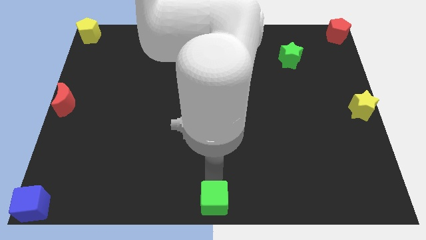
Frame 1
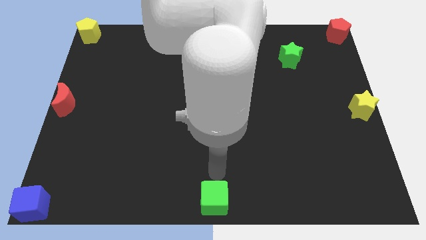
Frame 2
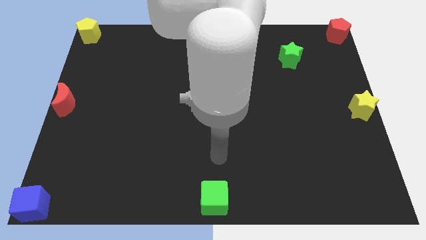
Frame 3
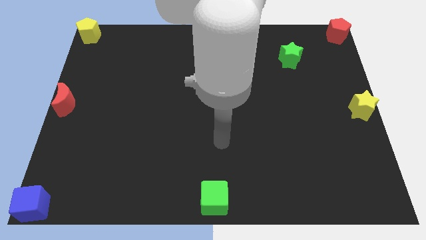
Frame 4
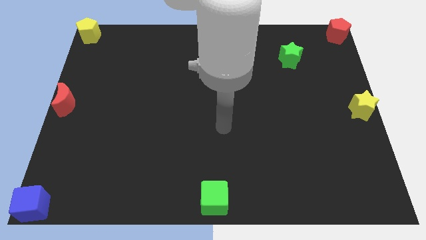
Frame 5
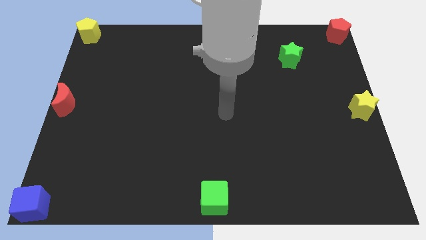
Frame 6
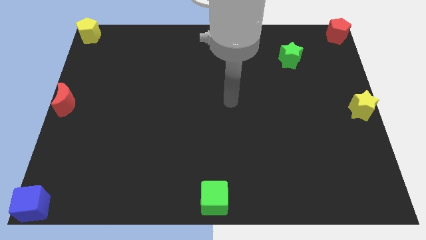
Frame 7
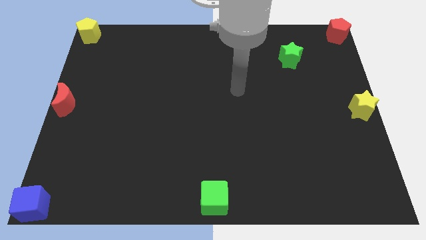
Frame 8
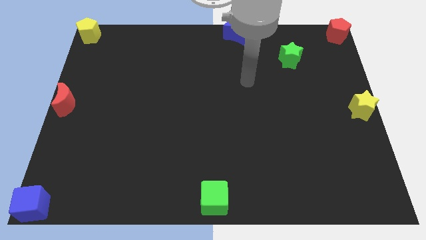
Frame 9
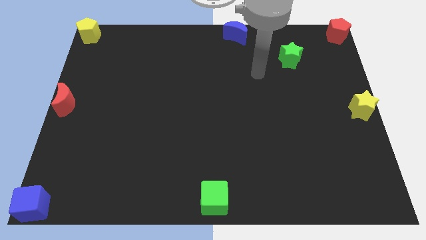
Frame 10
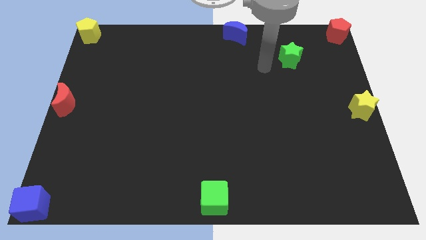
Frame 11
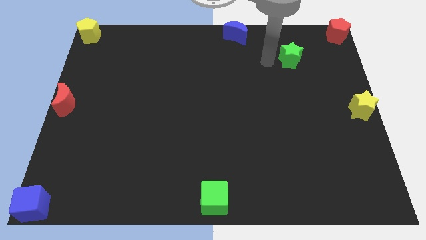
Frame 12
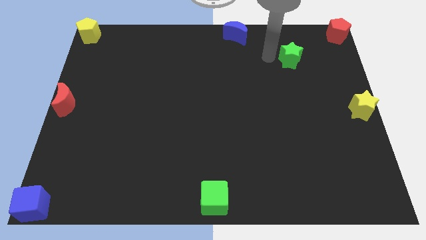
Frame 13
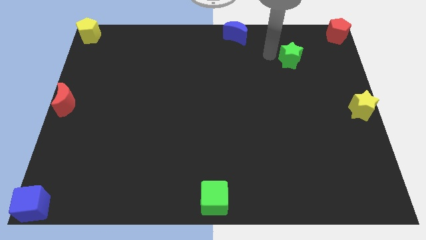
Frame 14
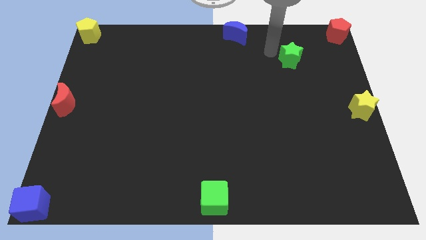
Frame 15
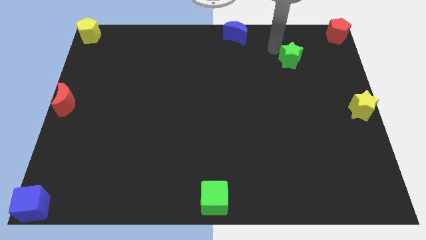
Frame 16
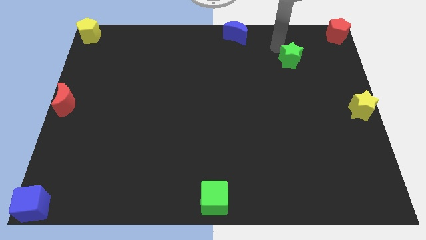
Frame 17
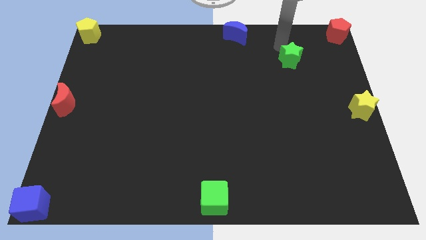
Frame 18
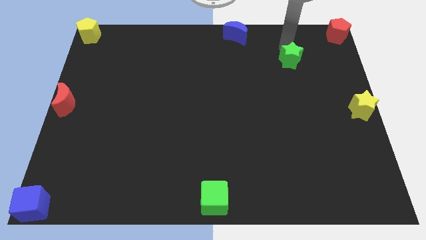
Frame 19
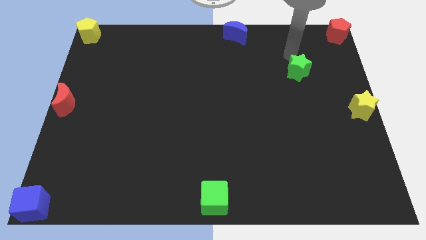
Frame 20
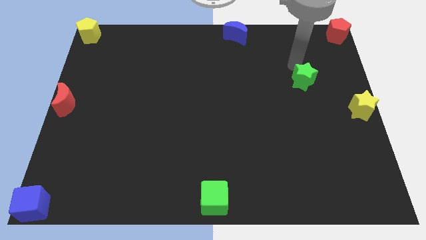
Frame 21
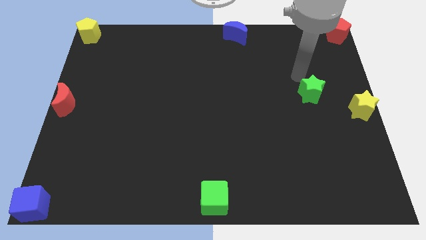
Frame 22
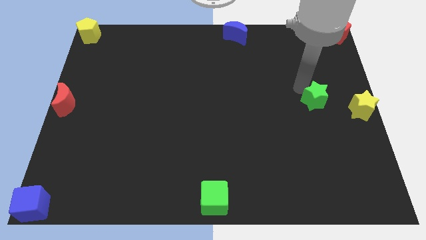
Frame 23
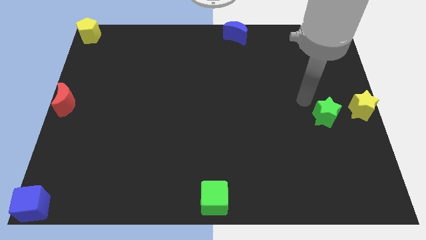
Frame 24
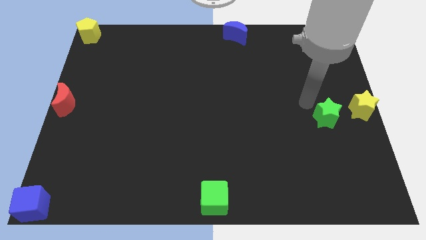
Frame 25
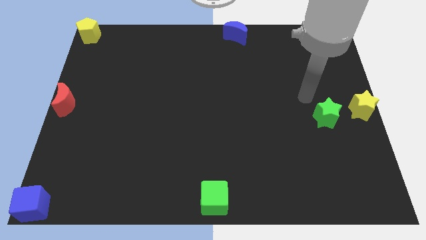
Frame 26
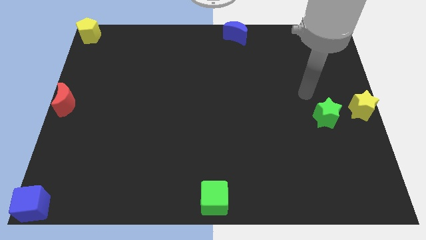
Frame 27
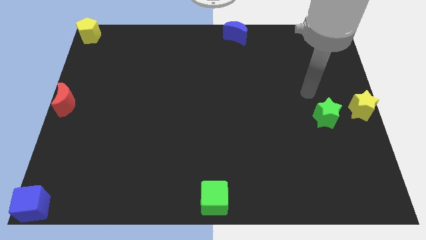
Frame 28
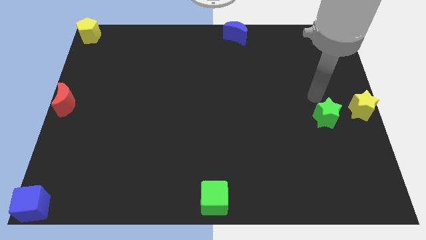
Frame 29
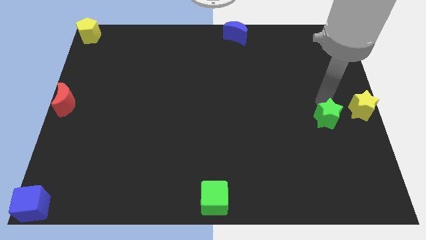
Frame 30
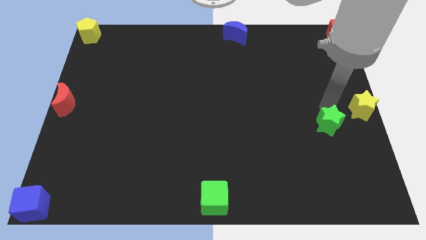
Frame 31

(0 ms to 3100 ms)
move the green star to the left side of the yellow star

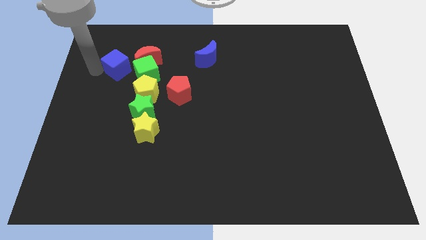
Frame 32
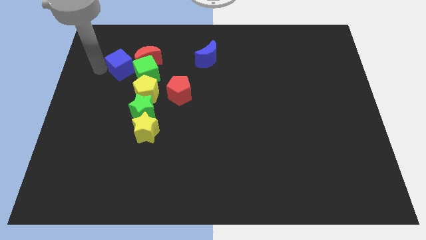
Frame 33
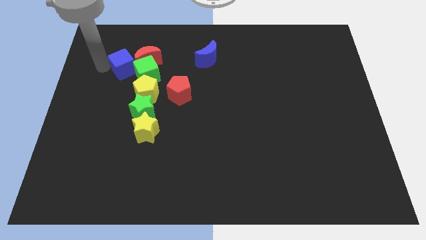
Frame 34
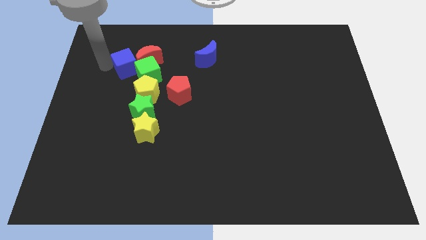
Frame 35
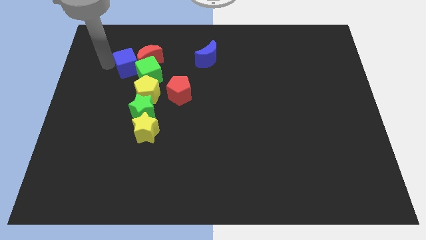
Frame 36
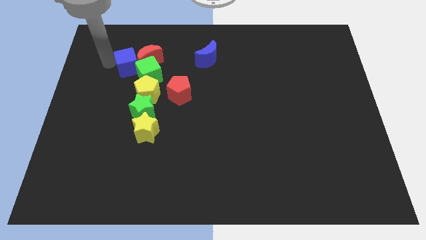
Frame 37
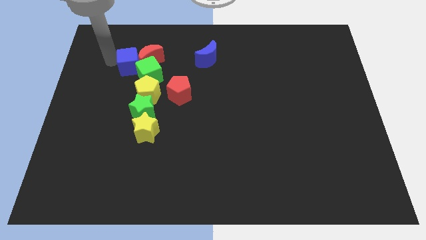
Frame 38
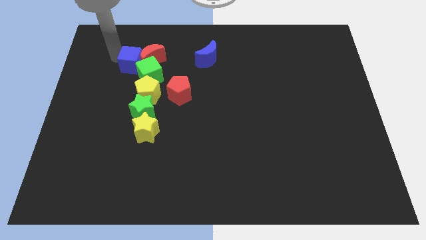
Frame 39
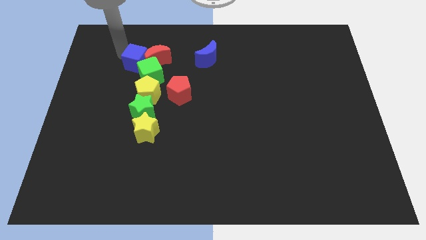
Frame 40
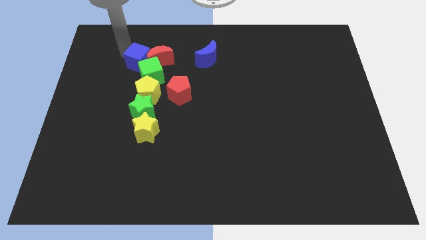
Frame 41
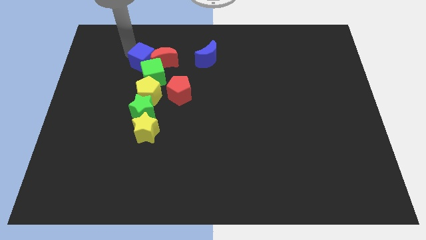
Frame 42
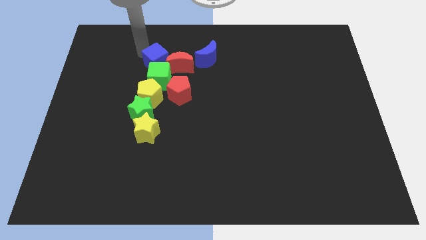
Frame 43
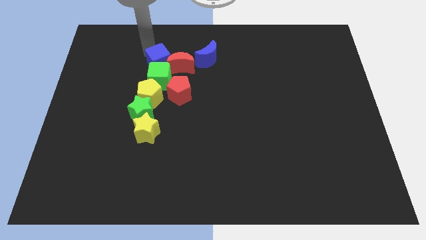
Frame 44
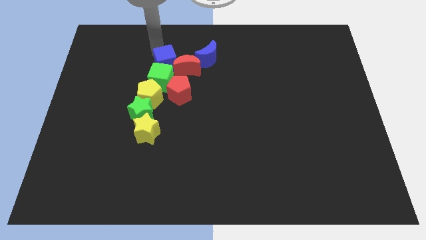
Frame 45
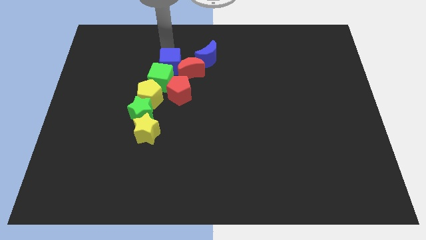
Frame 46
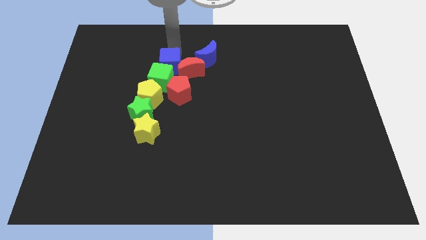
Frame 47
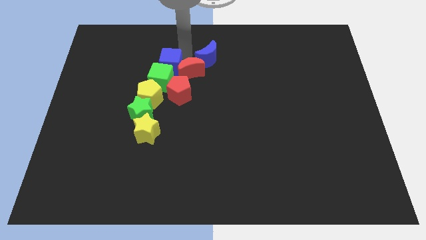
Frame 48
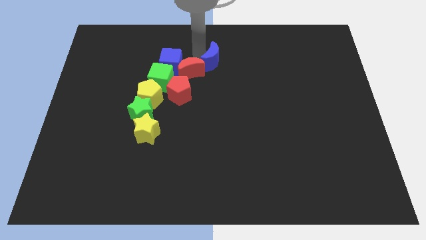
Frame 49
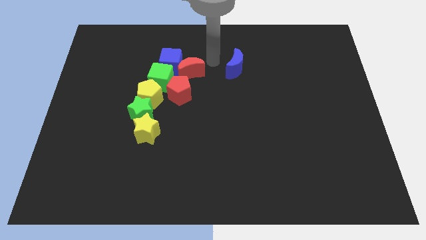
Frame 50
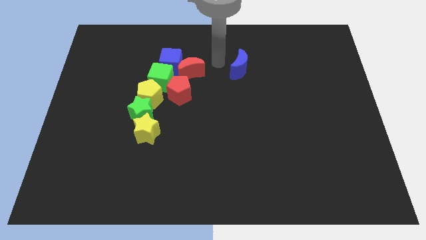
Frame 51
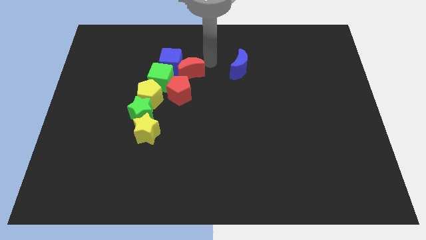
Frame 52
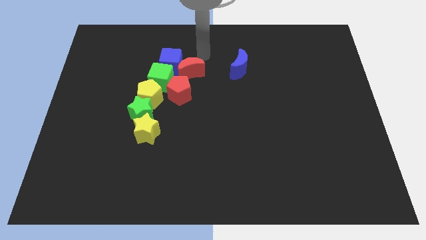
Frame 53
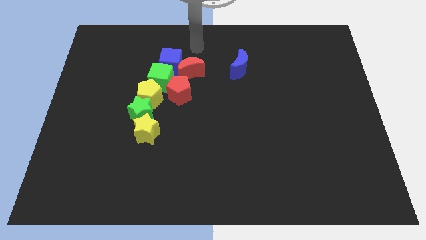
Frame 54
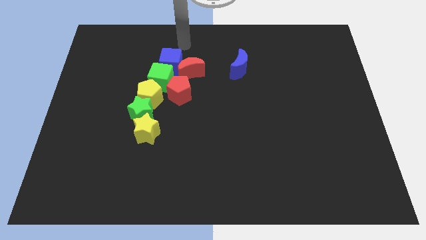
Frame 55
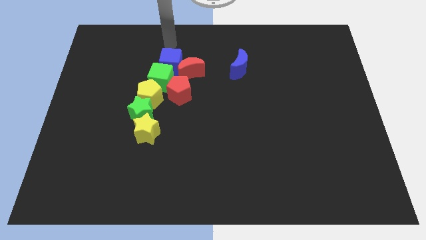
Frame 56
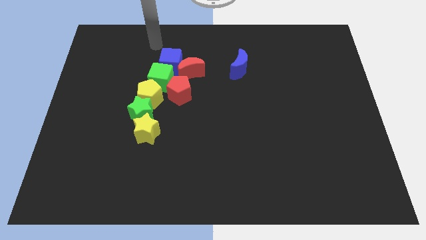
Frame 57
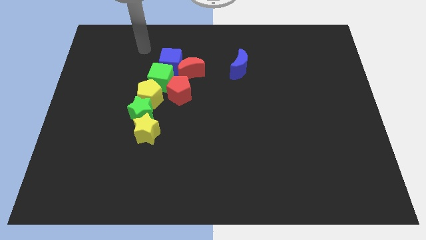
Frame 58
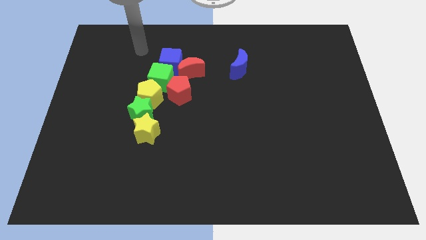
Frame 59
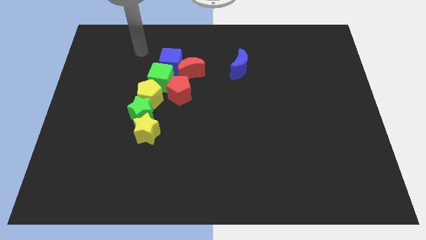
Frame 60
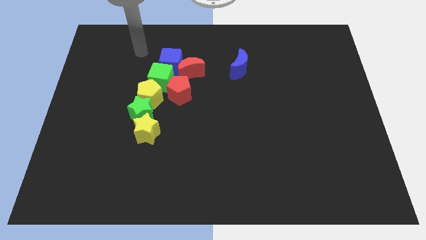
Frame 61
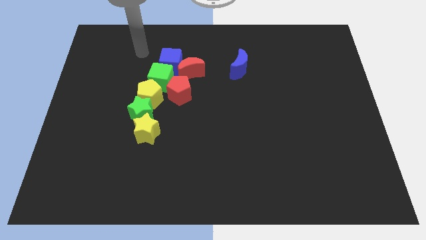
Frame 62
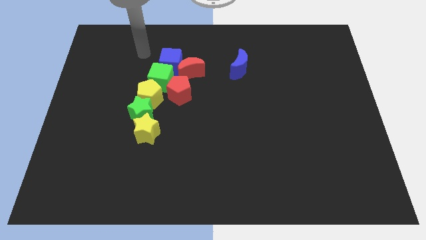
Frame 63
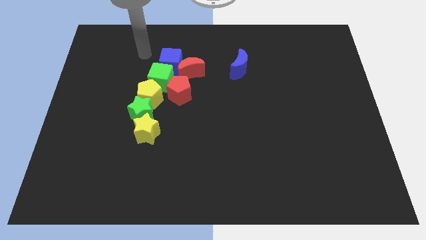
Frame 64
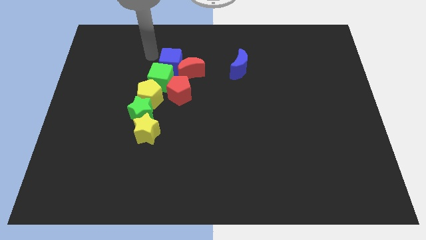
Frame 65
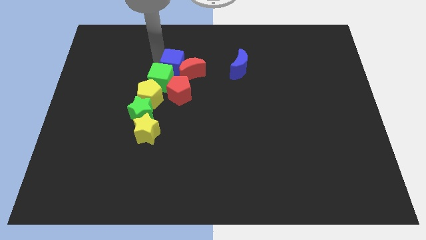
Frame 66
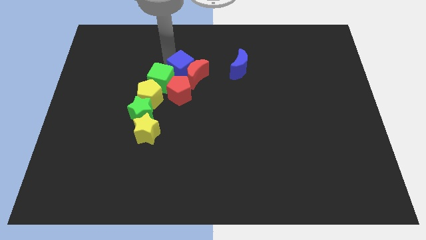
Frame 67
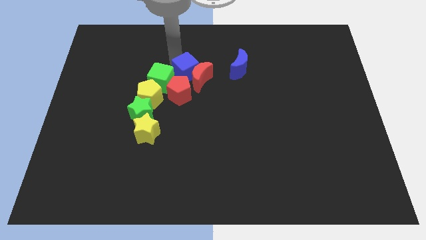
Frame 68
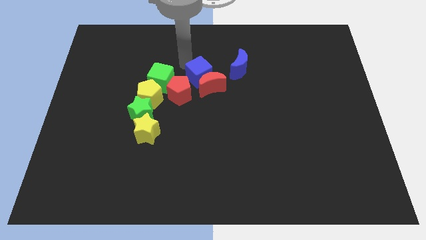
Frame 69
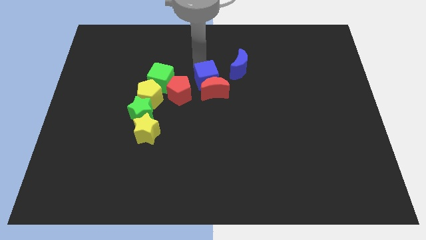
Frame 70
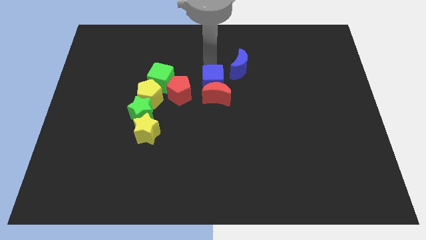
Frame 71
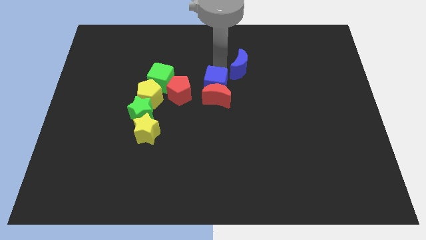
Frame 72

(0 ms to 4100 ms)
move blue cube along with red moon towards center

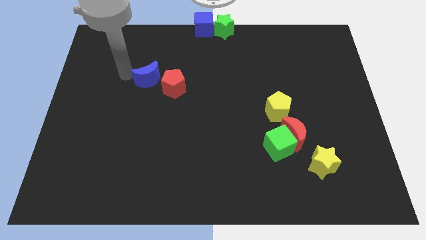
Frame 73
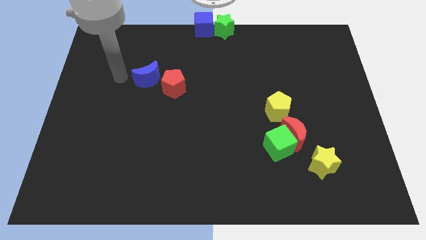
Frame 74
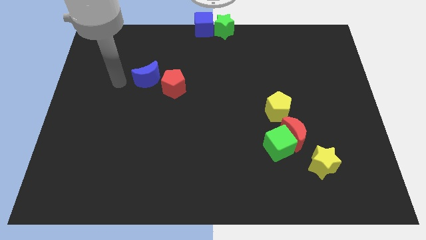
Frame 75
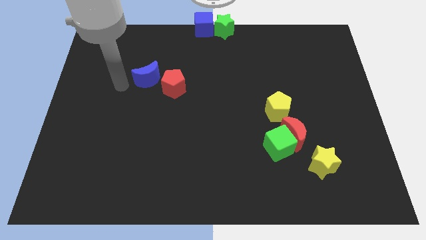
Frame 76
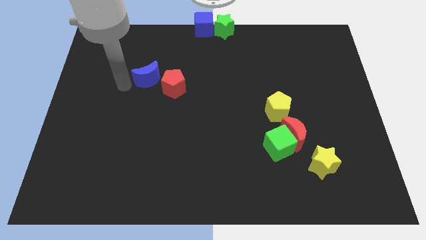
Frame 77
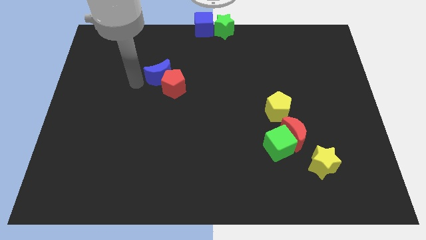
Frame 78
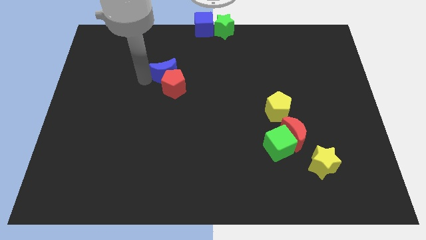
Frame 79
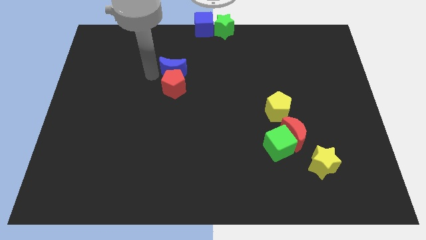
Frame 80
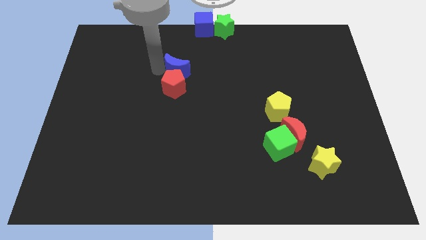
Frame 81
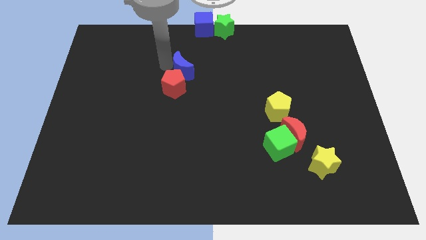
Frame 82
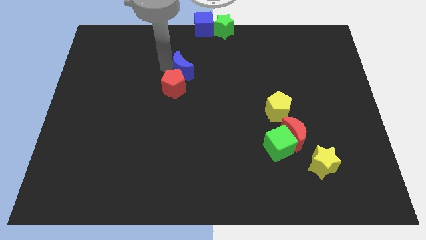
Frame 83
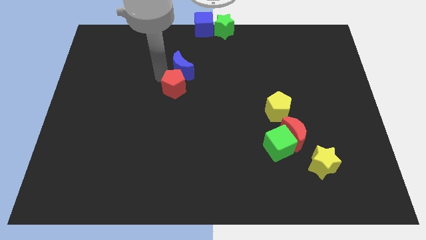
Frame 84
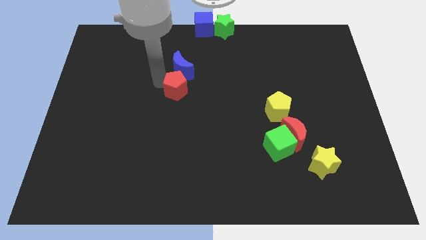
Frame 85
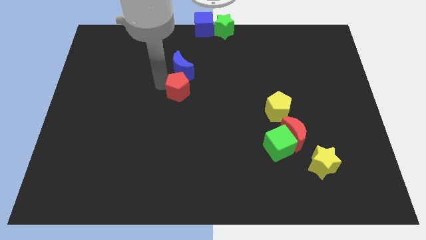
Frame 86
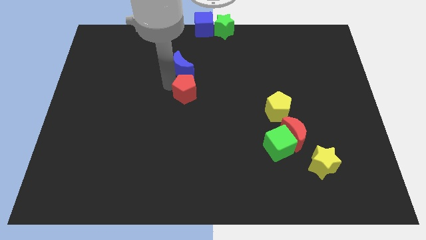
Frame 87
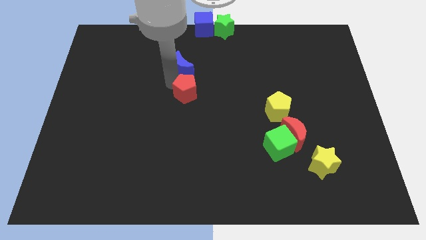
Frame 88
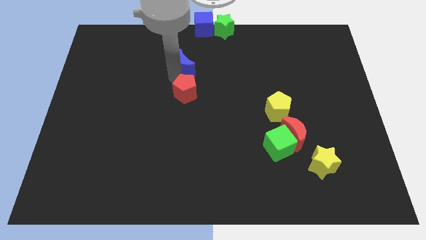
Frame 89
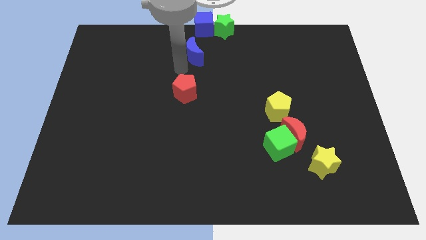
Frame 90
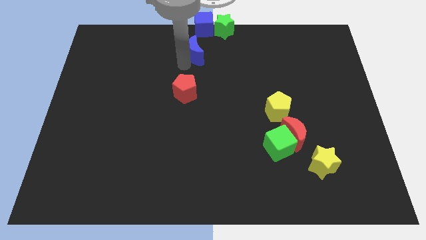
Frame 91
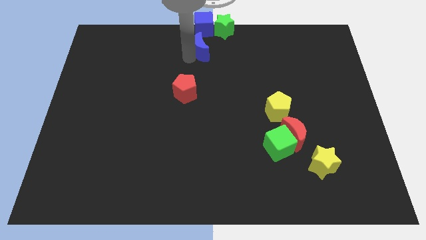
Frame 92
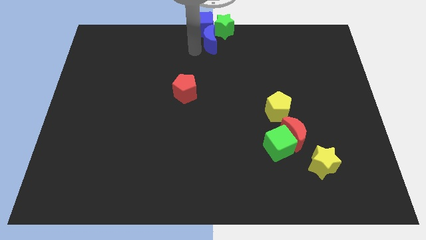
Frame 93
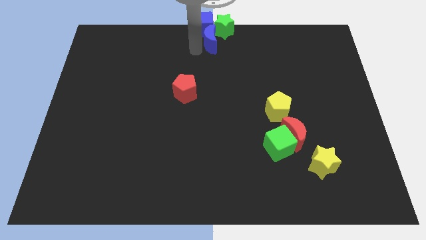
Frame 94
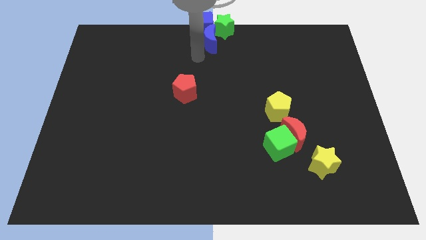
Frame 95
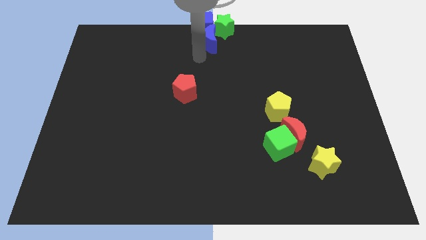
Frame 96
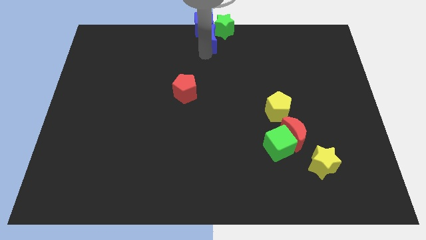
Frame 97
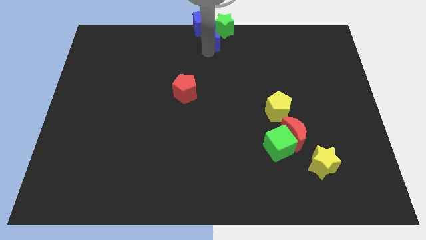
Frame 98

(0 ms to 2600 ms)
push the blue crescent into green star
